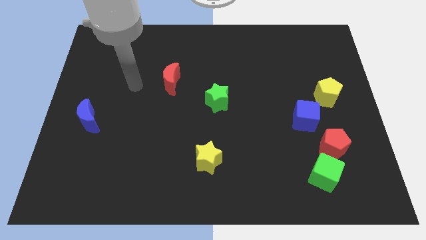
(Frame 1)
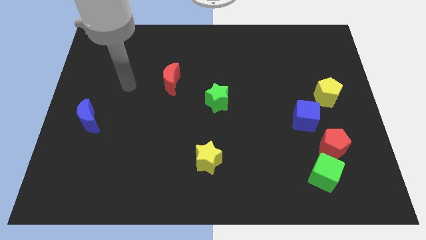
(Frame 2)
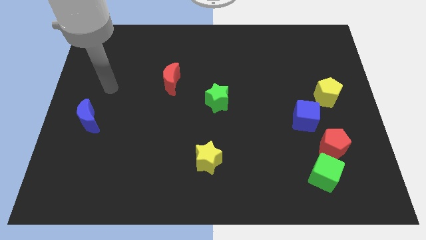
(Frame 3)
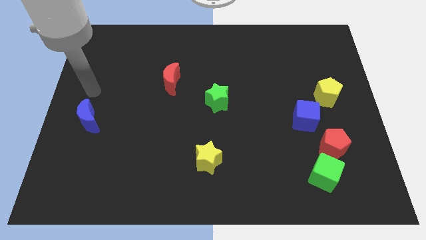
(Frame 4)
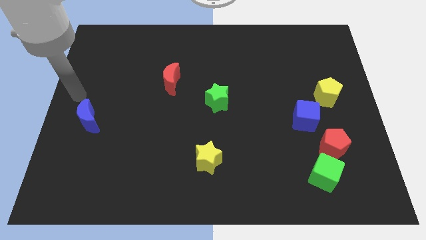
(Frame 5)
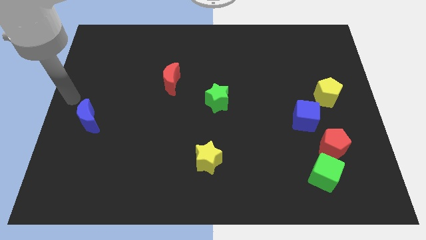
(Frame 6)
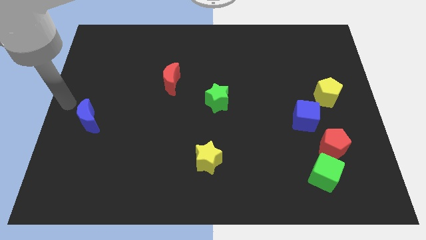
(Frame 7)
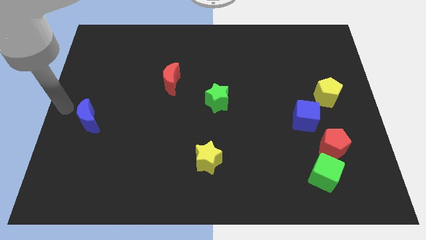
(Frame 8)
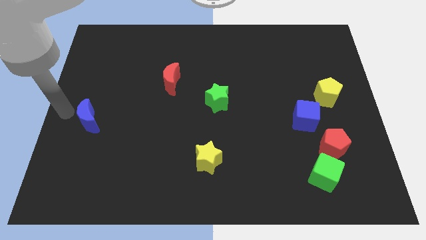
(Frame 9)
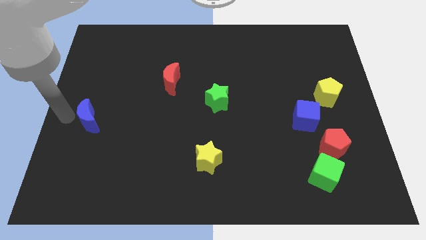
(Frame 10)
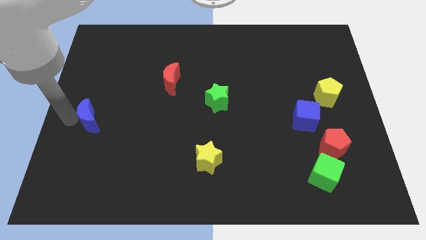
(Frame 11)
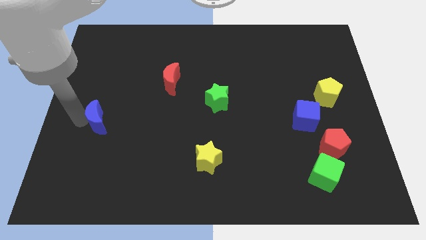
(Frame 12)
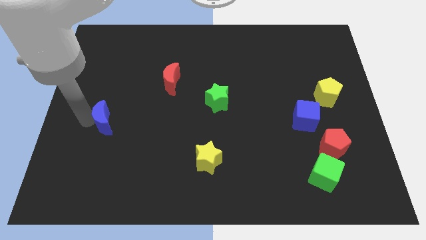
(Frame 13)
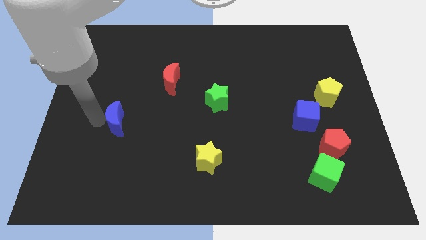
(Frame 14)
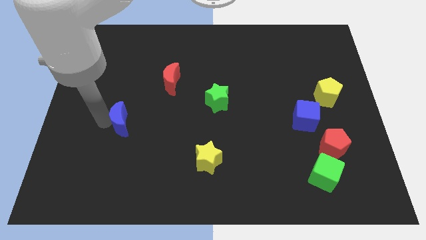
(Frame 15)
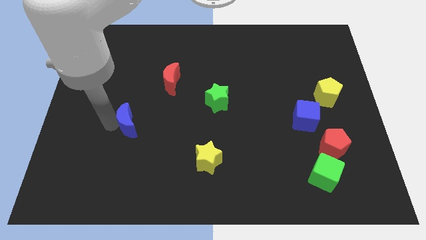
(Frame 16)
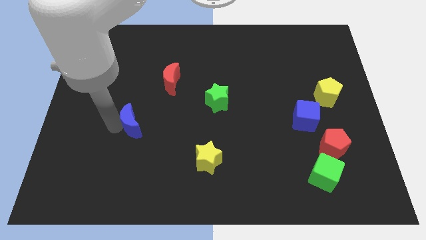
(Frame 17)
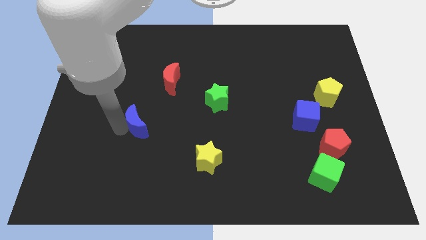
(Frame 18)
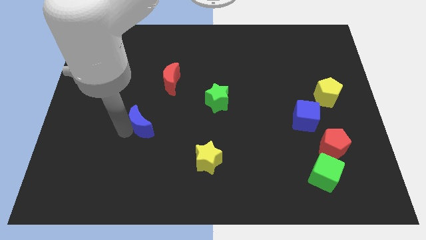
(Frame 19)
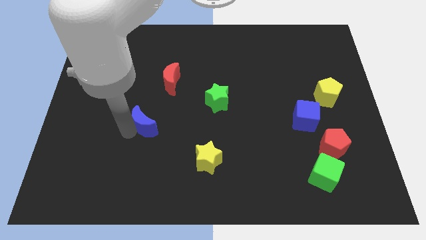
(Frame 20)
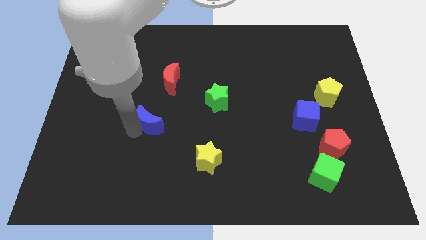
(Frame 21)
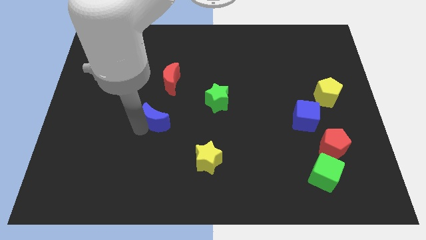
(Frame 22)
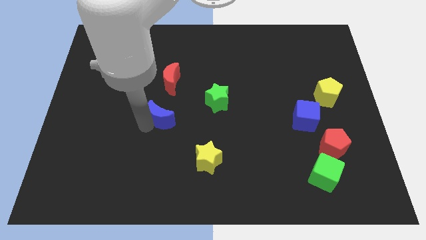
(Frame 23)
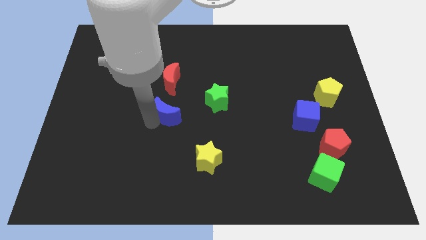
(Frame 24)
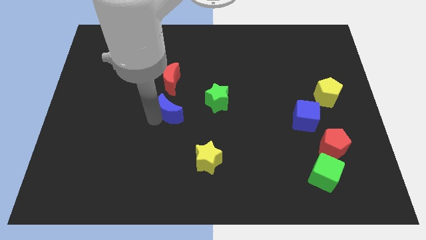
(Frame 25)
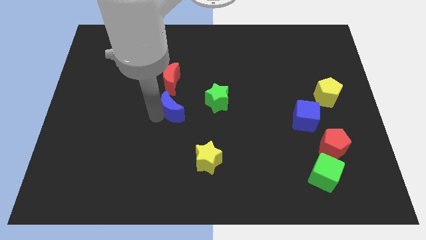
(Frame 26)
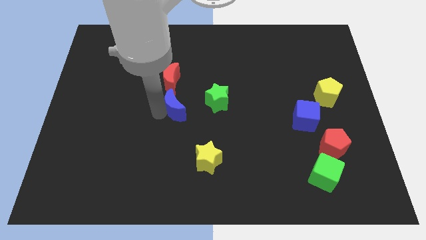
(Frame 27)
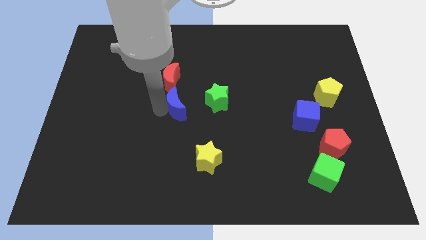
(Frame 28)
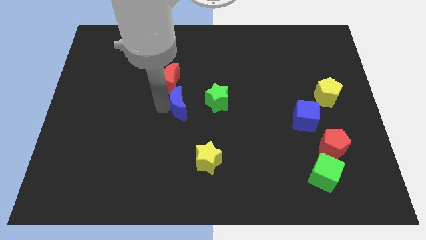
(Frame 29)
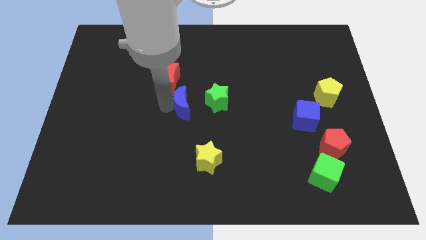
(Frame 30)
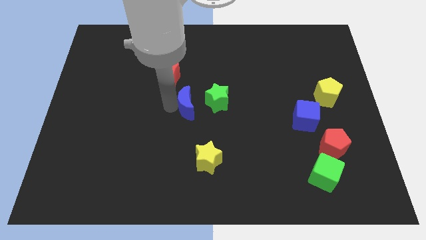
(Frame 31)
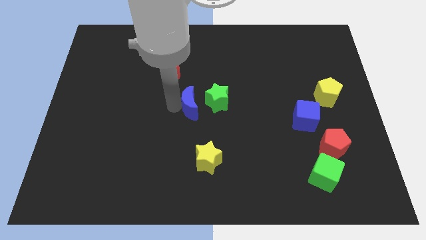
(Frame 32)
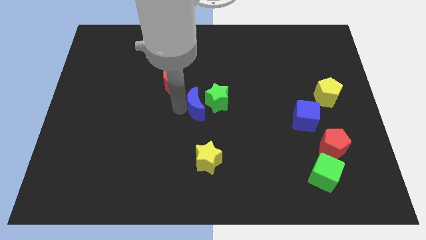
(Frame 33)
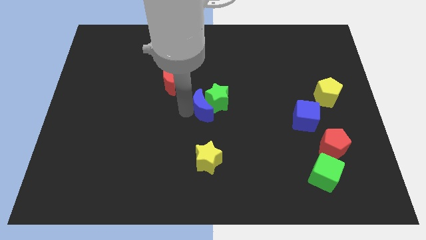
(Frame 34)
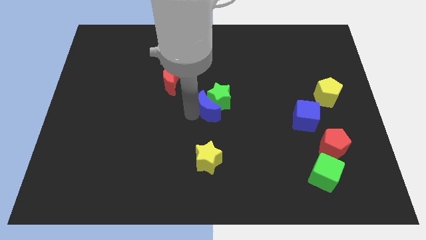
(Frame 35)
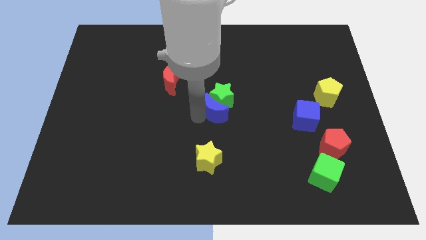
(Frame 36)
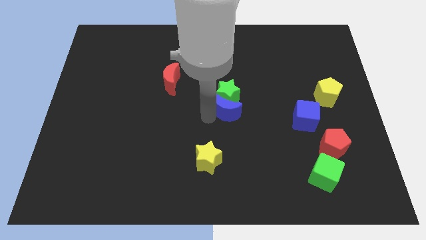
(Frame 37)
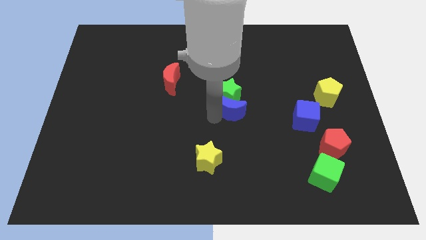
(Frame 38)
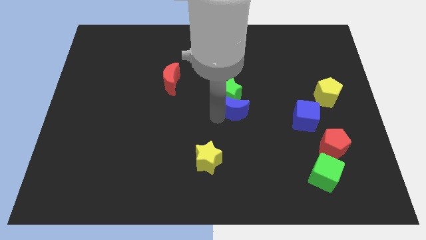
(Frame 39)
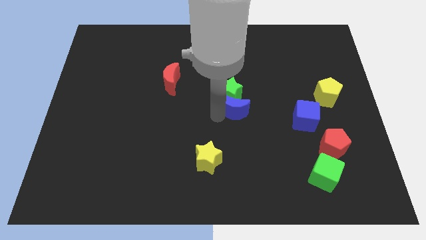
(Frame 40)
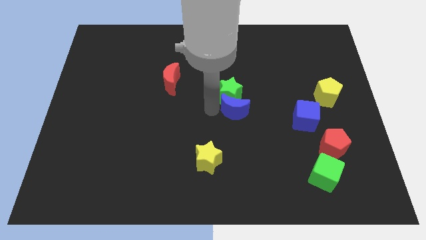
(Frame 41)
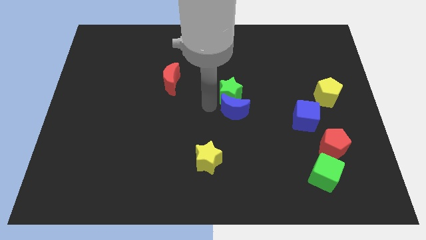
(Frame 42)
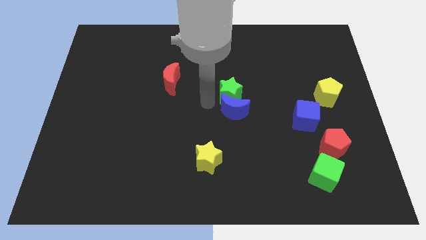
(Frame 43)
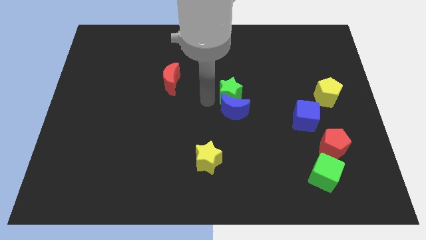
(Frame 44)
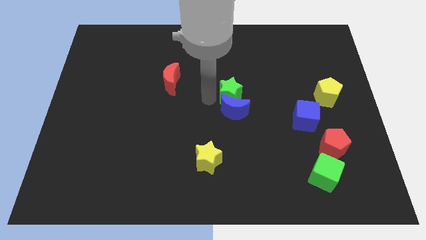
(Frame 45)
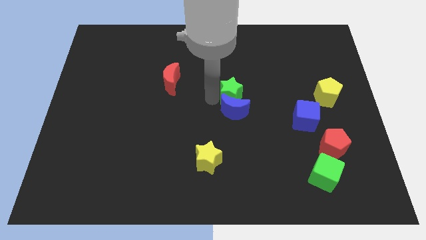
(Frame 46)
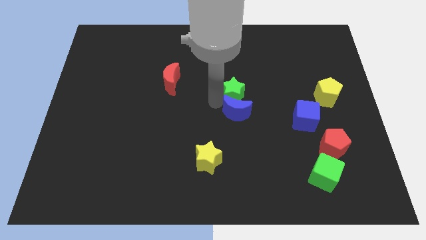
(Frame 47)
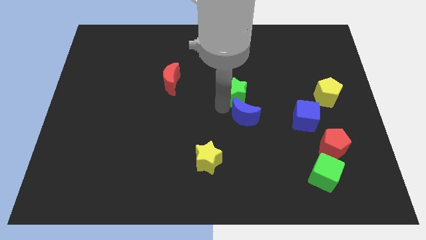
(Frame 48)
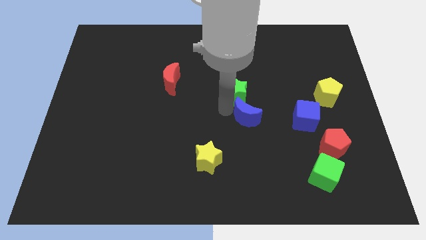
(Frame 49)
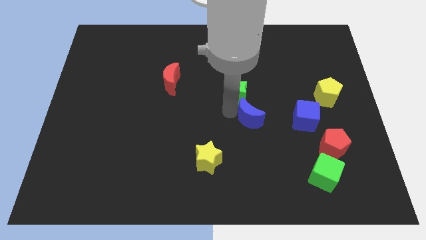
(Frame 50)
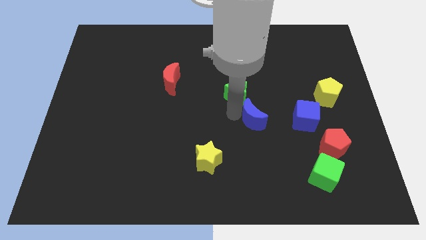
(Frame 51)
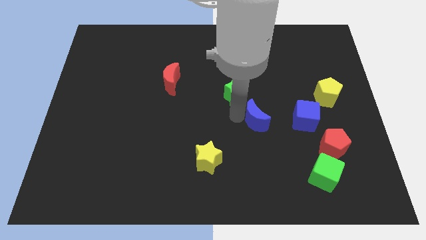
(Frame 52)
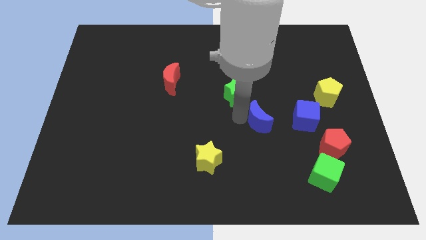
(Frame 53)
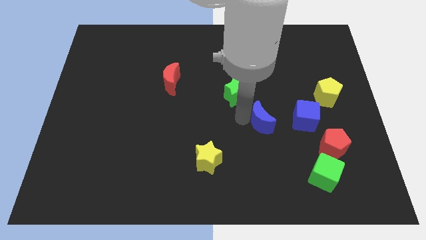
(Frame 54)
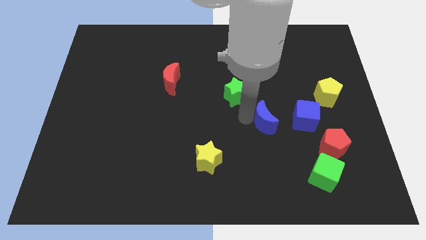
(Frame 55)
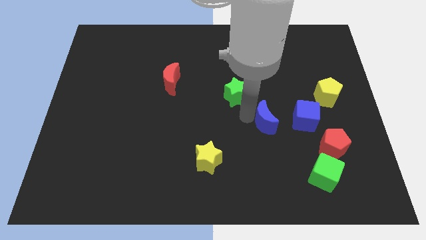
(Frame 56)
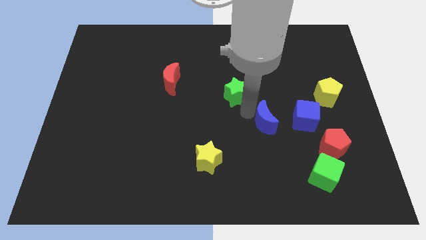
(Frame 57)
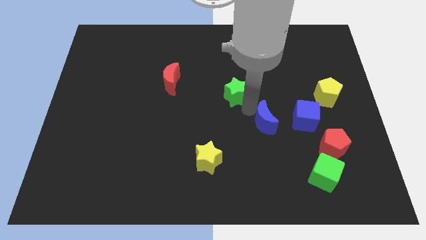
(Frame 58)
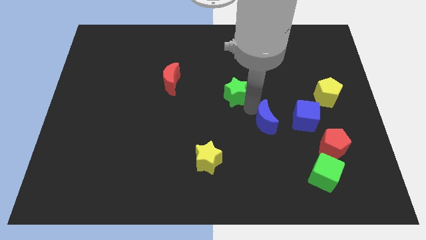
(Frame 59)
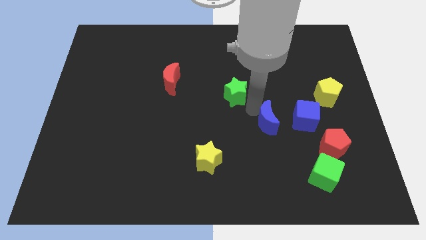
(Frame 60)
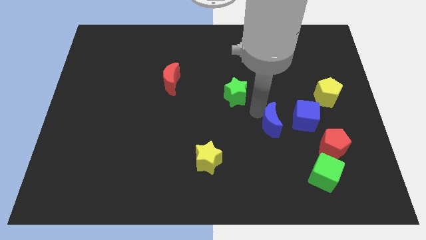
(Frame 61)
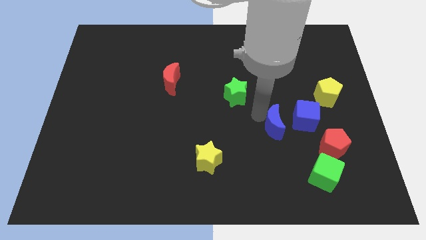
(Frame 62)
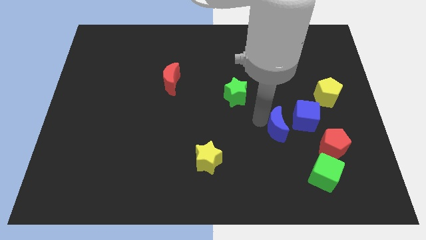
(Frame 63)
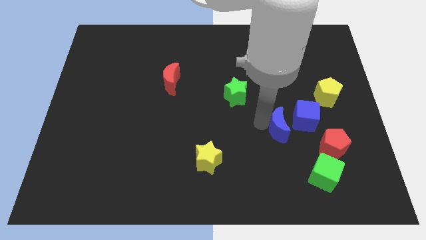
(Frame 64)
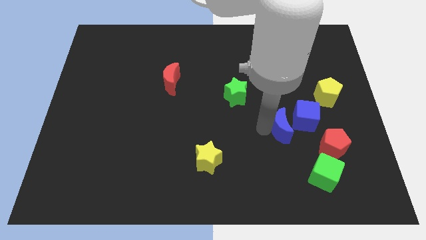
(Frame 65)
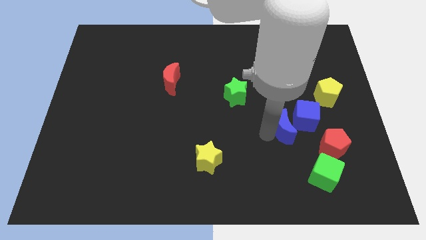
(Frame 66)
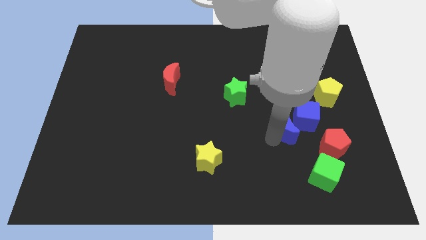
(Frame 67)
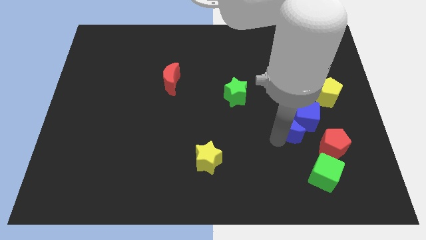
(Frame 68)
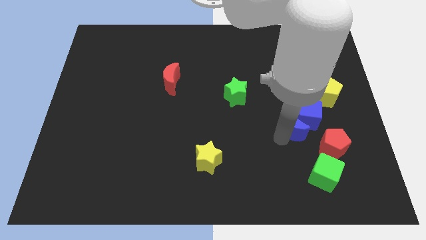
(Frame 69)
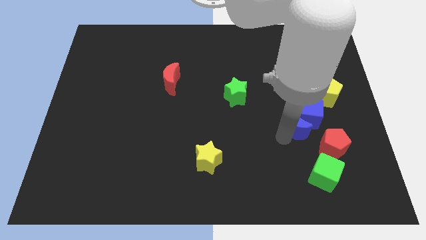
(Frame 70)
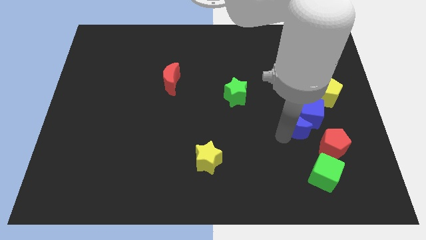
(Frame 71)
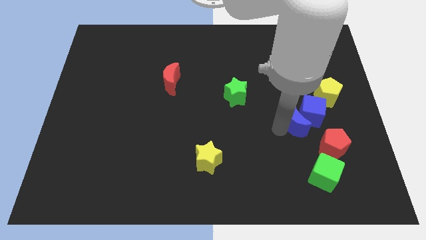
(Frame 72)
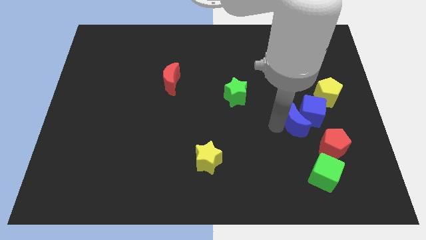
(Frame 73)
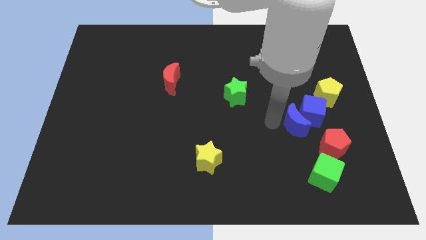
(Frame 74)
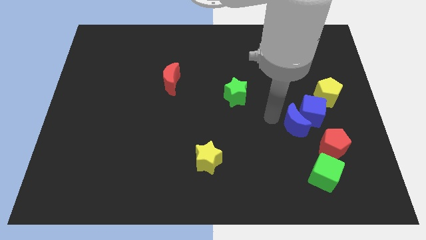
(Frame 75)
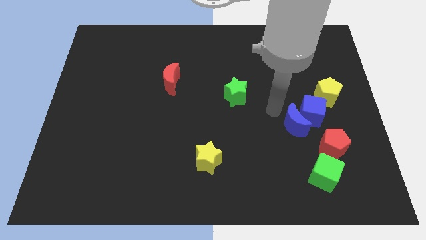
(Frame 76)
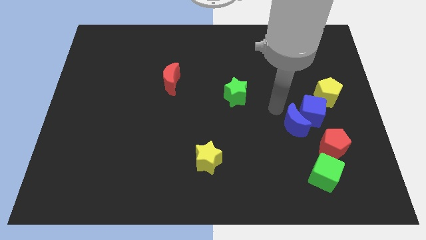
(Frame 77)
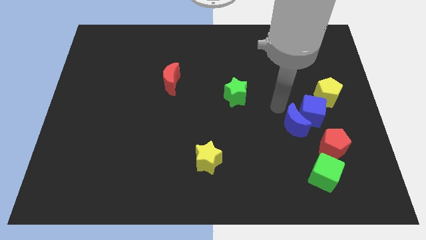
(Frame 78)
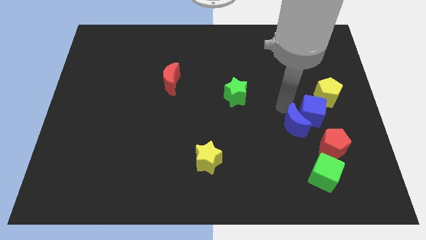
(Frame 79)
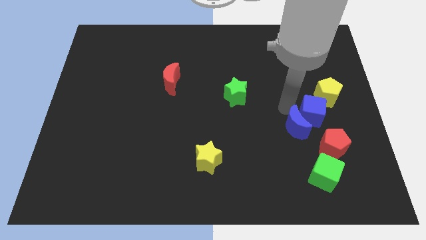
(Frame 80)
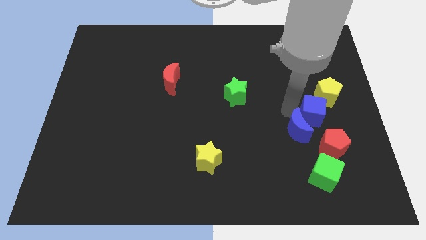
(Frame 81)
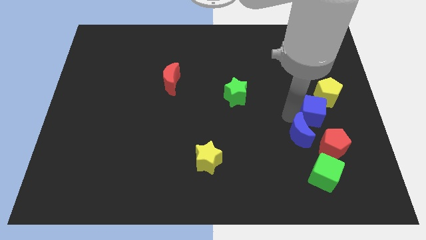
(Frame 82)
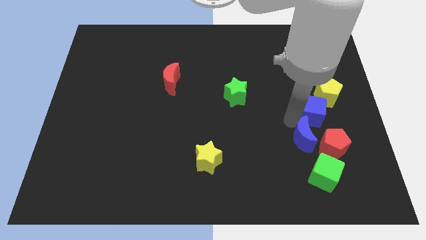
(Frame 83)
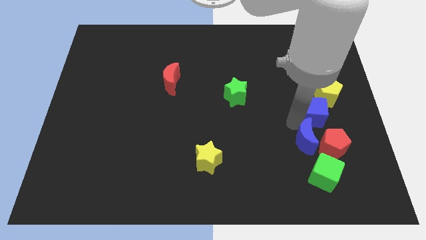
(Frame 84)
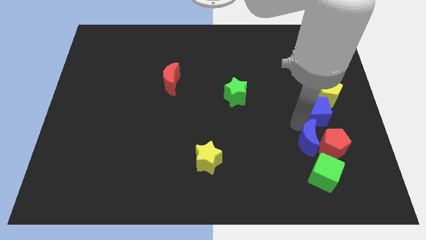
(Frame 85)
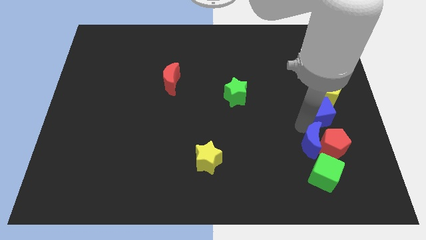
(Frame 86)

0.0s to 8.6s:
put the blue moon close to the red pentagon
